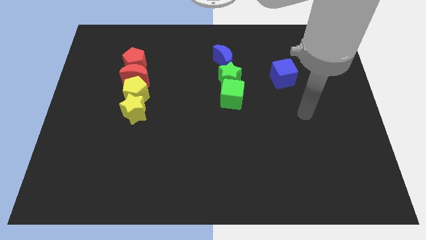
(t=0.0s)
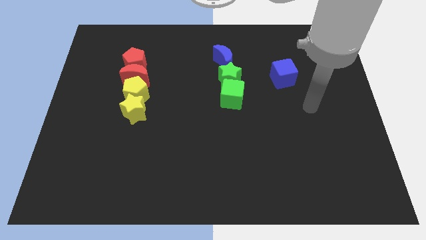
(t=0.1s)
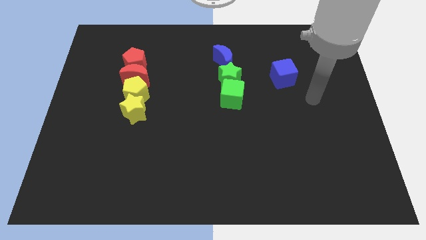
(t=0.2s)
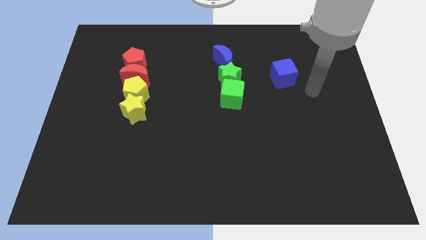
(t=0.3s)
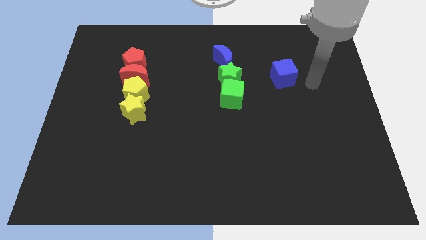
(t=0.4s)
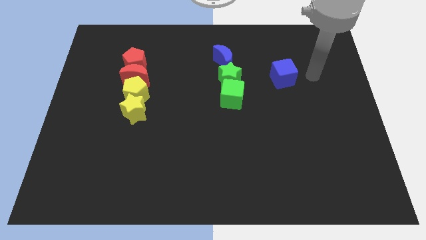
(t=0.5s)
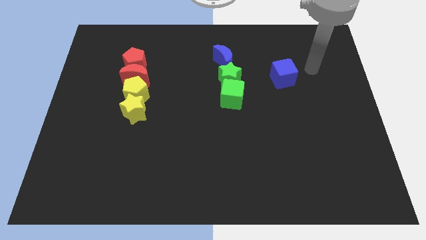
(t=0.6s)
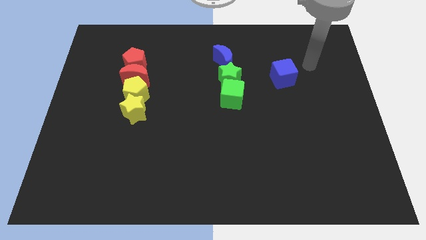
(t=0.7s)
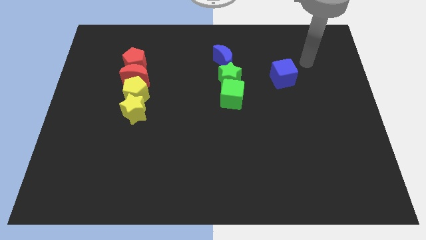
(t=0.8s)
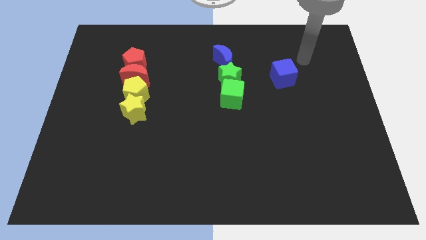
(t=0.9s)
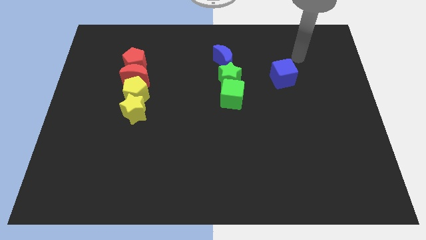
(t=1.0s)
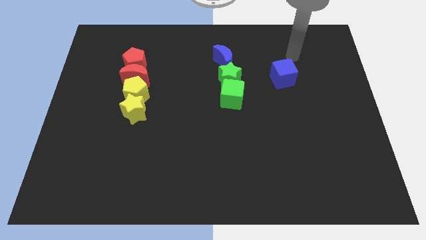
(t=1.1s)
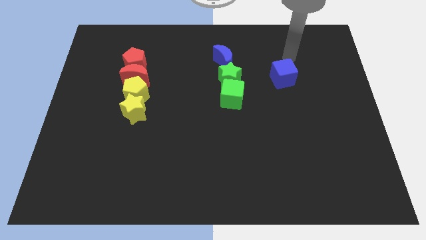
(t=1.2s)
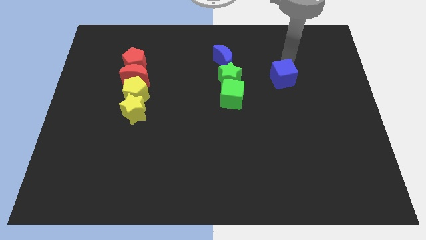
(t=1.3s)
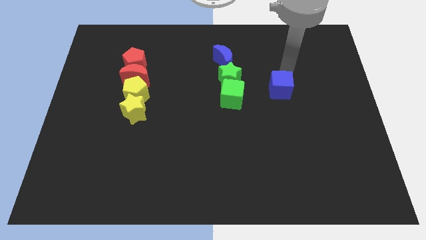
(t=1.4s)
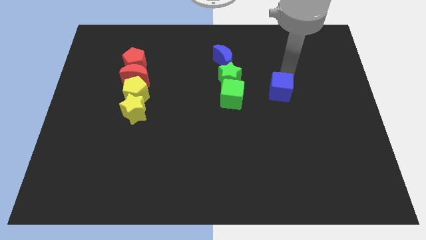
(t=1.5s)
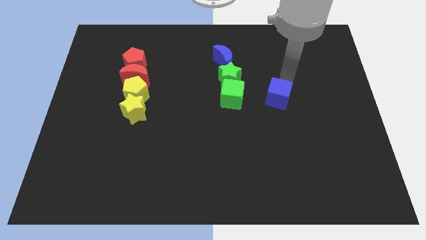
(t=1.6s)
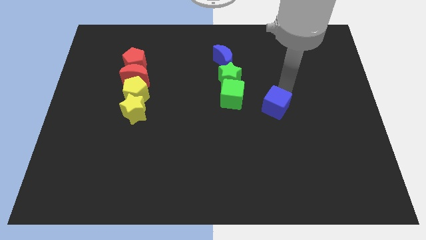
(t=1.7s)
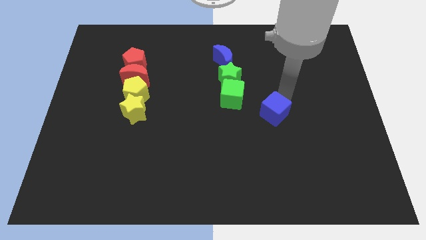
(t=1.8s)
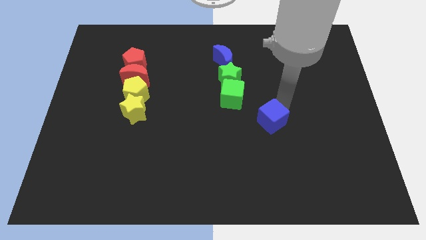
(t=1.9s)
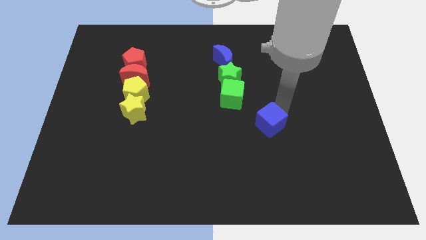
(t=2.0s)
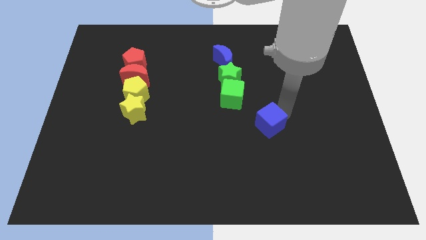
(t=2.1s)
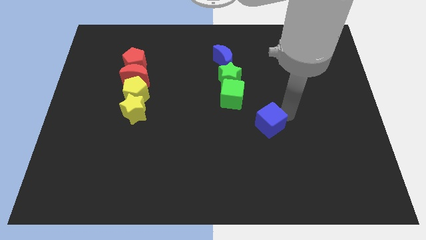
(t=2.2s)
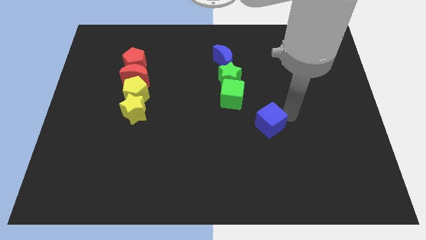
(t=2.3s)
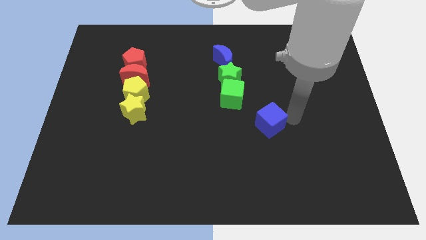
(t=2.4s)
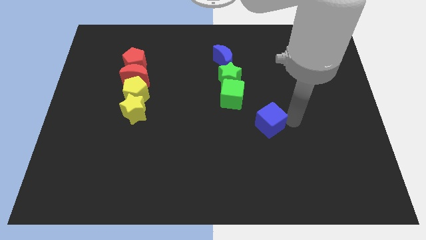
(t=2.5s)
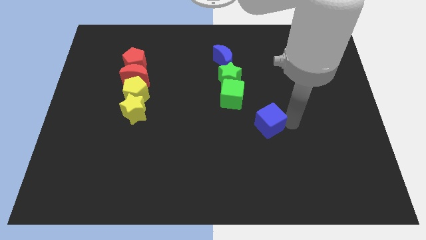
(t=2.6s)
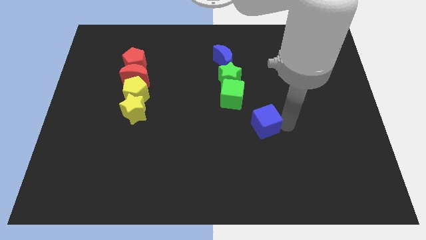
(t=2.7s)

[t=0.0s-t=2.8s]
move the blue cube diagonally bottom right to the green cube

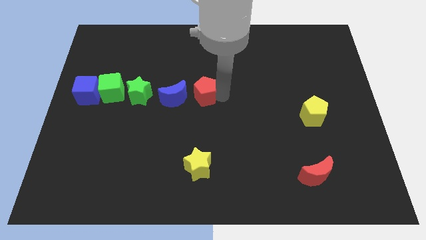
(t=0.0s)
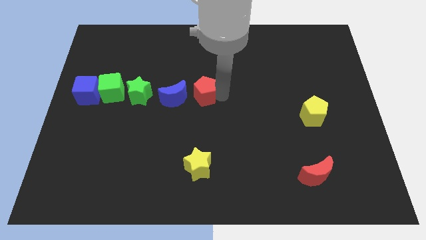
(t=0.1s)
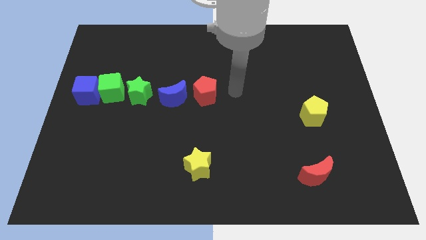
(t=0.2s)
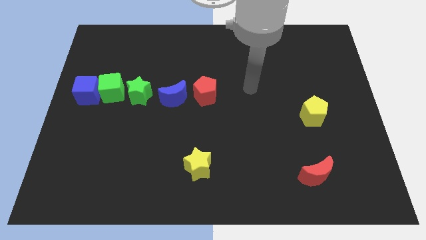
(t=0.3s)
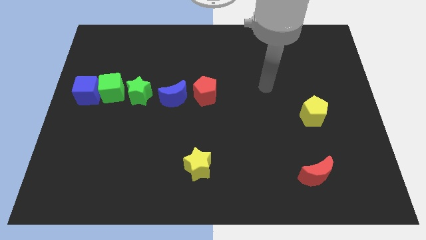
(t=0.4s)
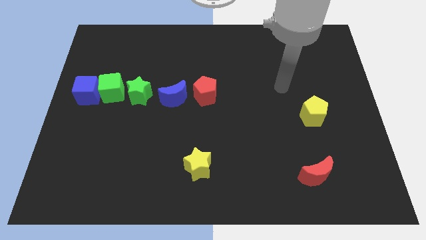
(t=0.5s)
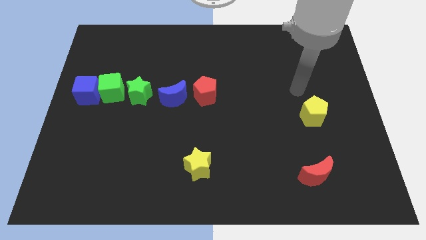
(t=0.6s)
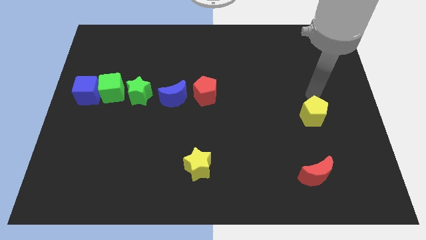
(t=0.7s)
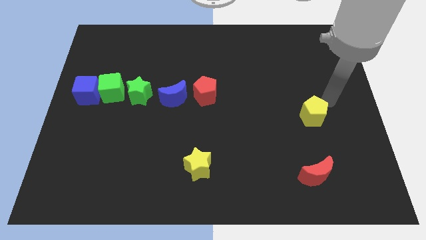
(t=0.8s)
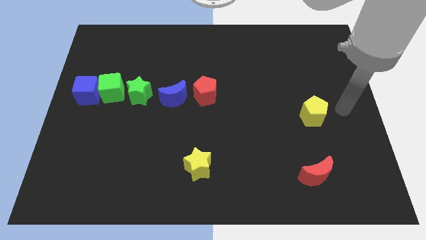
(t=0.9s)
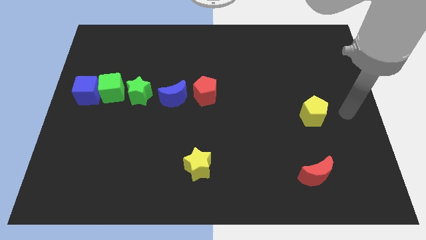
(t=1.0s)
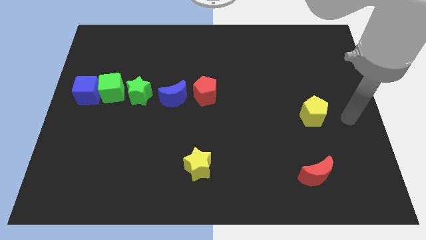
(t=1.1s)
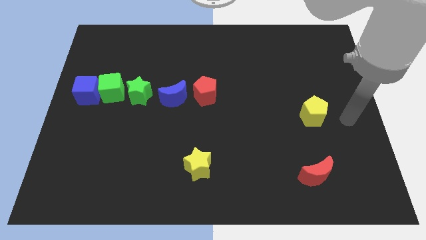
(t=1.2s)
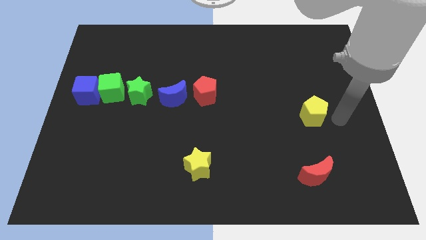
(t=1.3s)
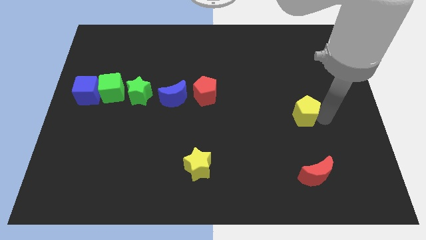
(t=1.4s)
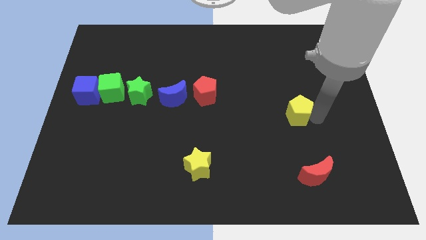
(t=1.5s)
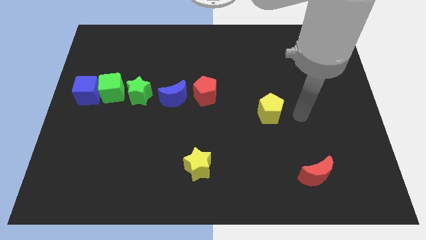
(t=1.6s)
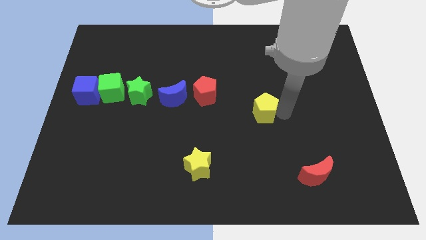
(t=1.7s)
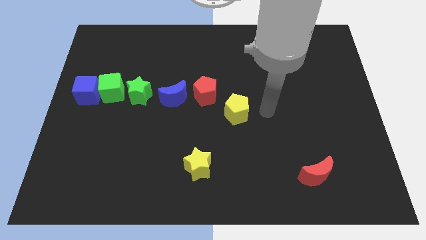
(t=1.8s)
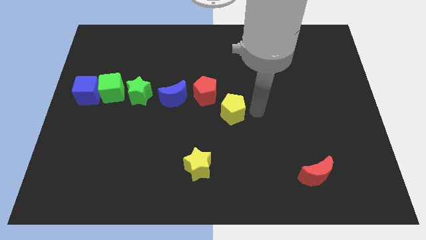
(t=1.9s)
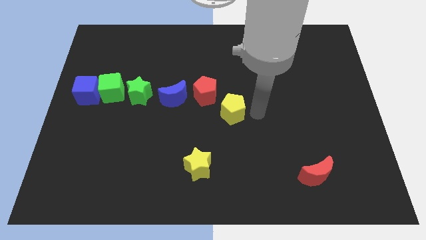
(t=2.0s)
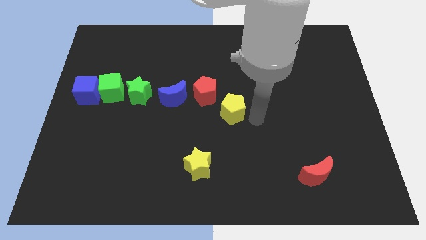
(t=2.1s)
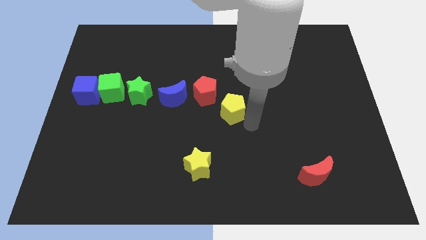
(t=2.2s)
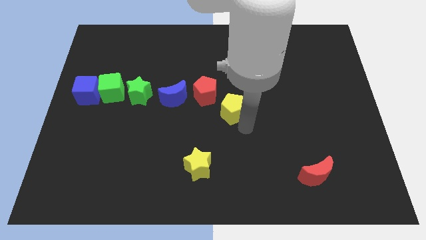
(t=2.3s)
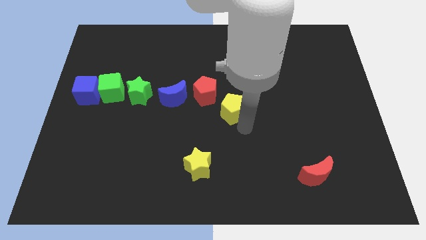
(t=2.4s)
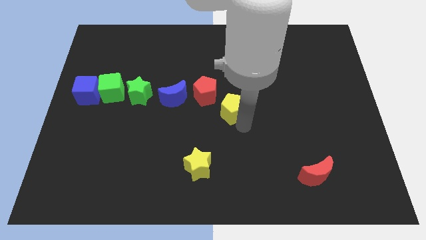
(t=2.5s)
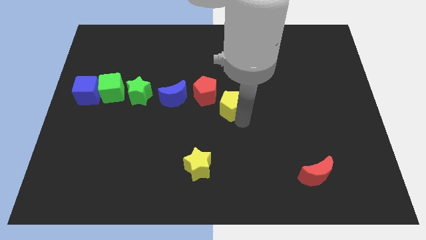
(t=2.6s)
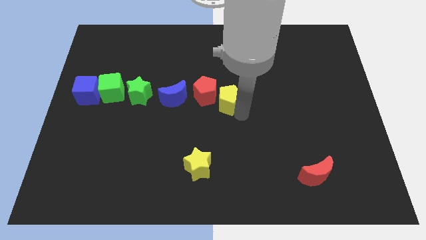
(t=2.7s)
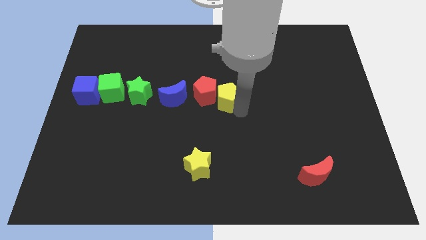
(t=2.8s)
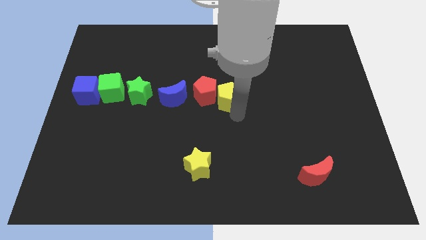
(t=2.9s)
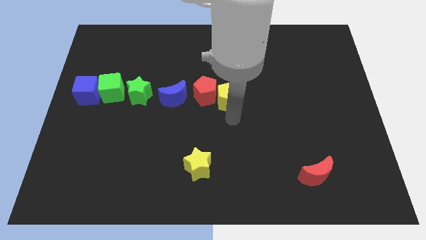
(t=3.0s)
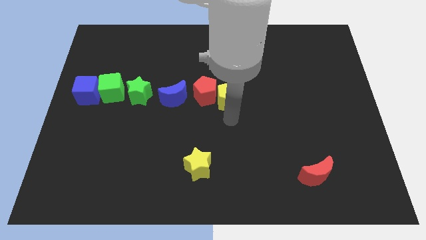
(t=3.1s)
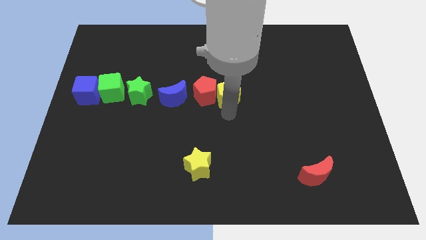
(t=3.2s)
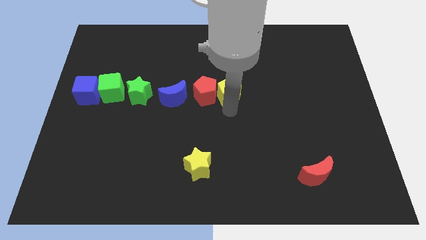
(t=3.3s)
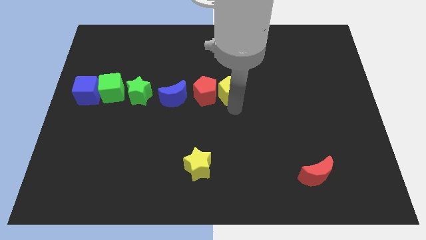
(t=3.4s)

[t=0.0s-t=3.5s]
push yellow pentagon towards red pentagon

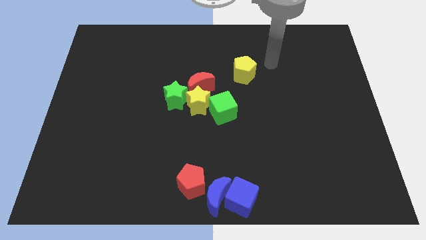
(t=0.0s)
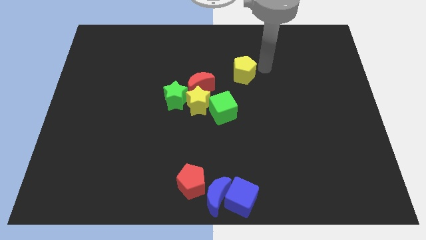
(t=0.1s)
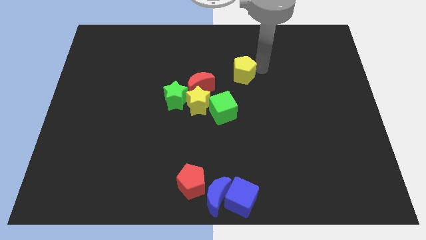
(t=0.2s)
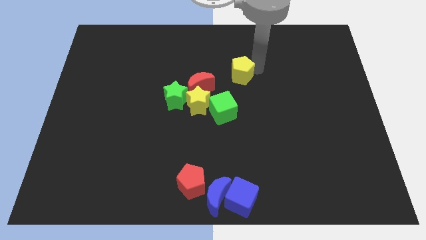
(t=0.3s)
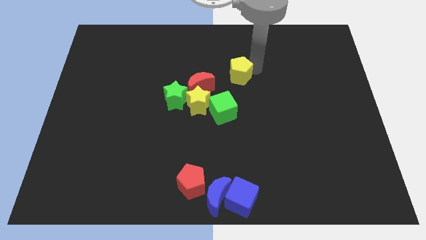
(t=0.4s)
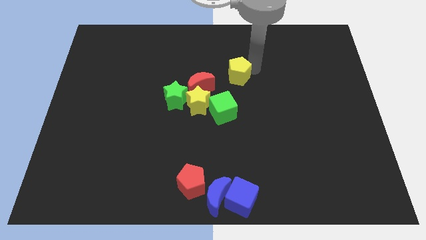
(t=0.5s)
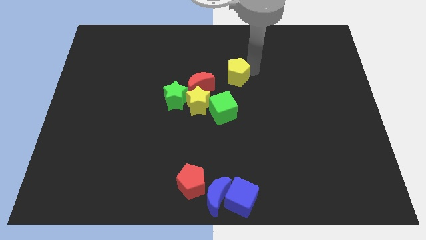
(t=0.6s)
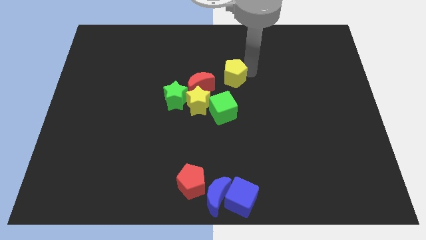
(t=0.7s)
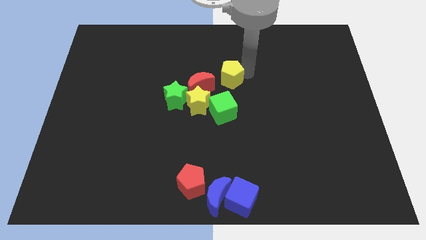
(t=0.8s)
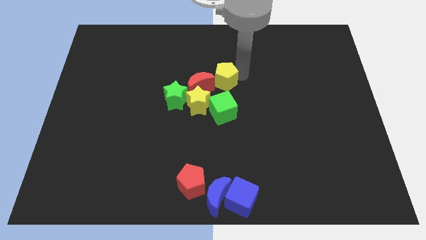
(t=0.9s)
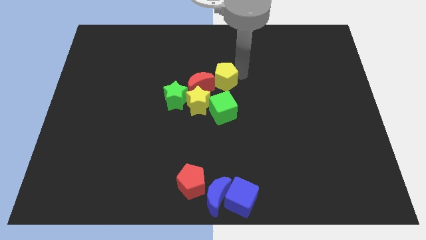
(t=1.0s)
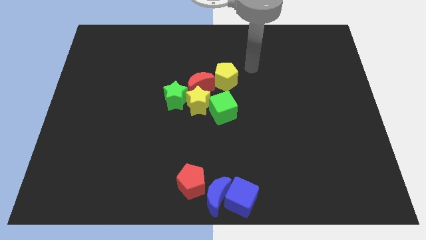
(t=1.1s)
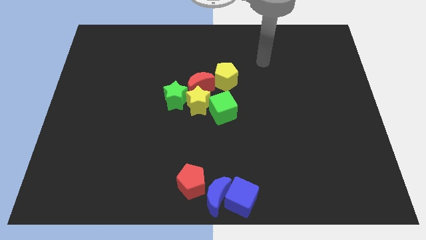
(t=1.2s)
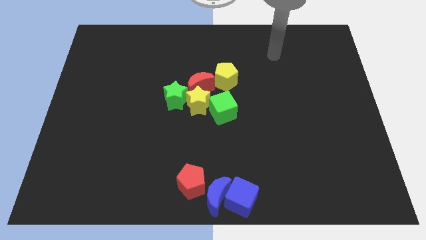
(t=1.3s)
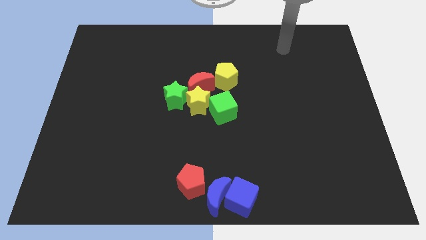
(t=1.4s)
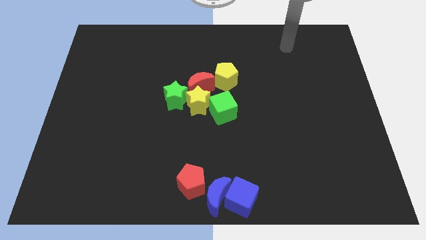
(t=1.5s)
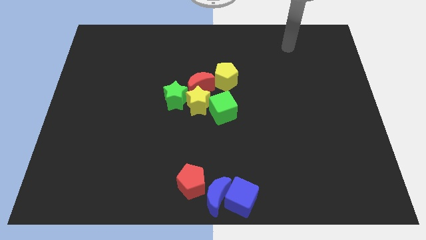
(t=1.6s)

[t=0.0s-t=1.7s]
place the yellow pentagon at the top side of the green cube

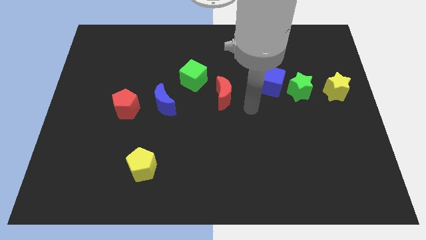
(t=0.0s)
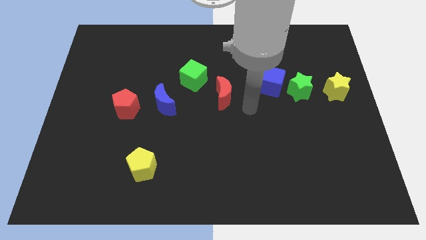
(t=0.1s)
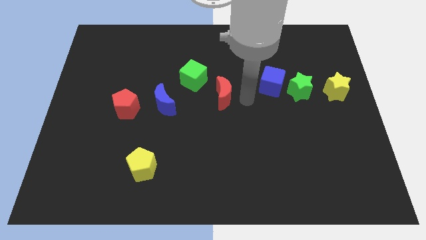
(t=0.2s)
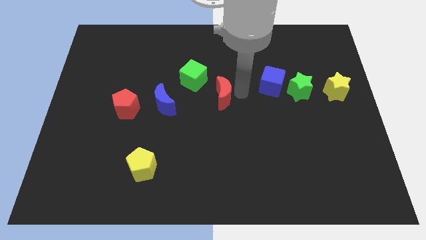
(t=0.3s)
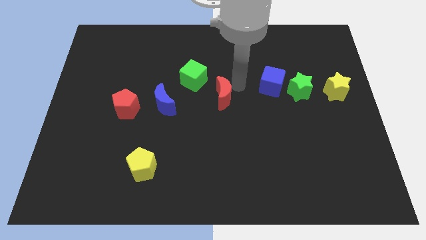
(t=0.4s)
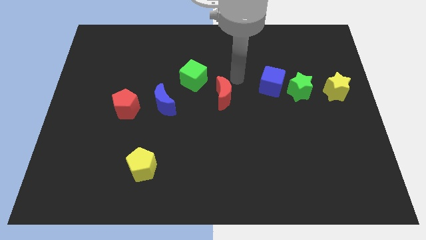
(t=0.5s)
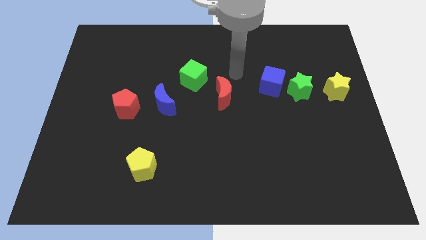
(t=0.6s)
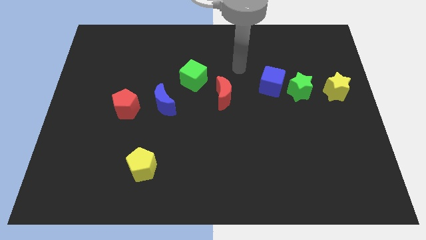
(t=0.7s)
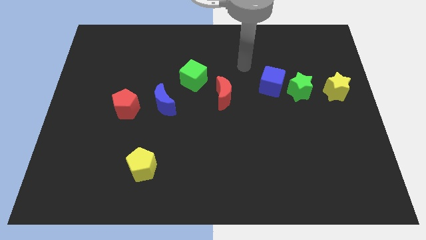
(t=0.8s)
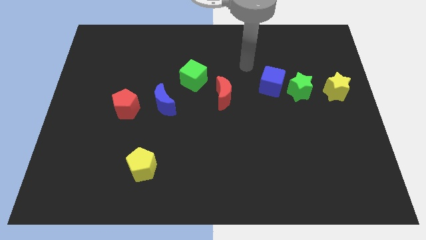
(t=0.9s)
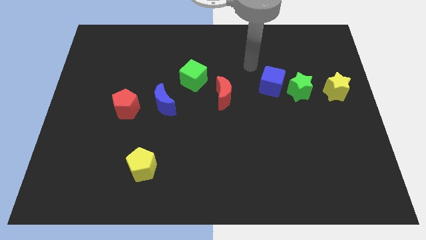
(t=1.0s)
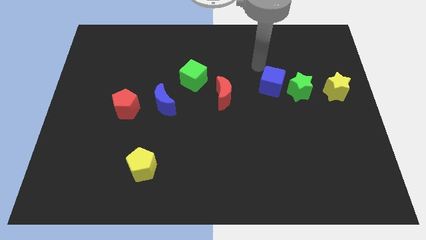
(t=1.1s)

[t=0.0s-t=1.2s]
move your arm above the blue cube
